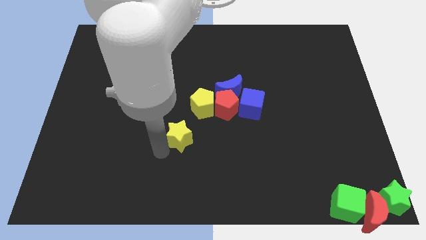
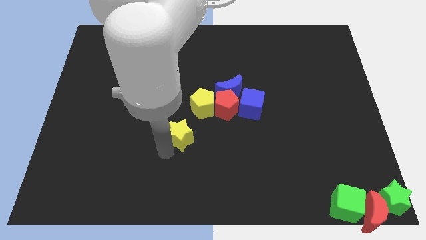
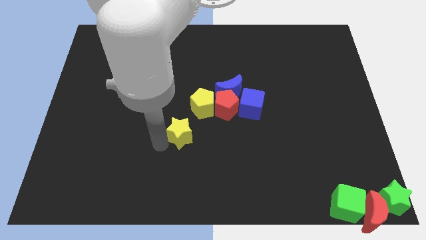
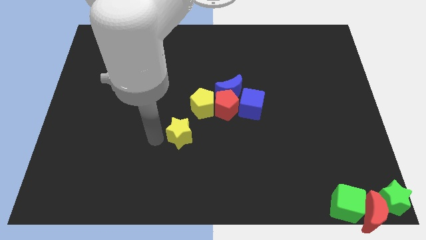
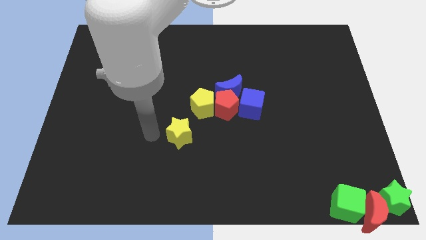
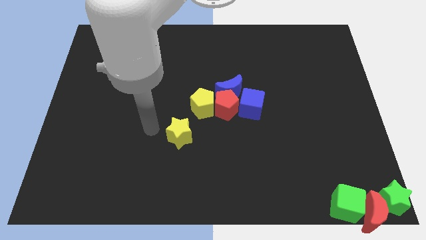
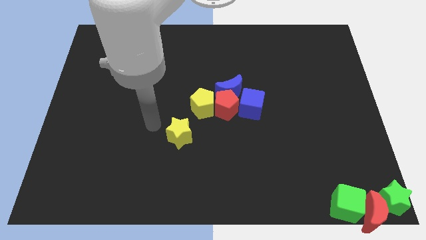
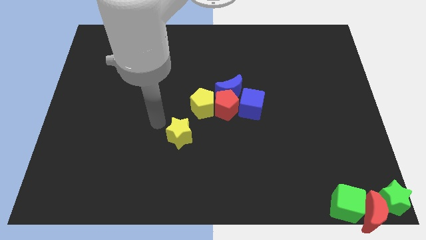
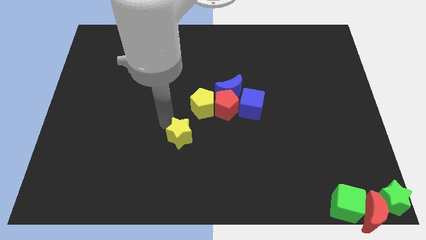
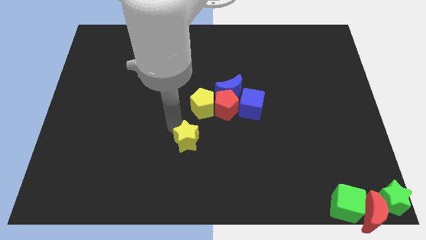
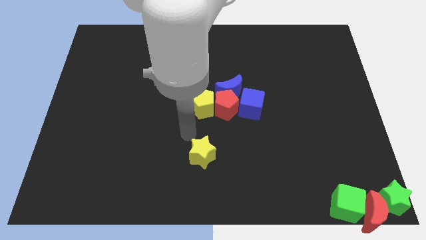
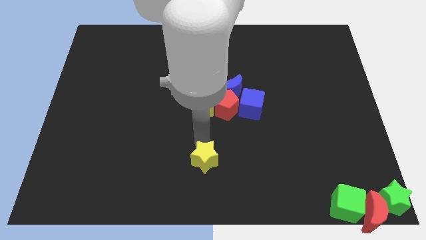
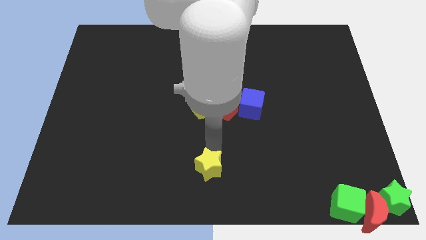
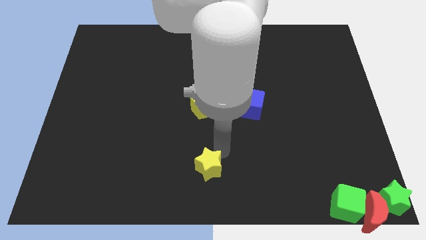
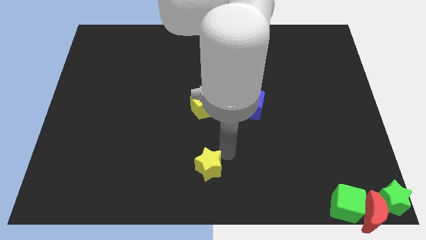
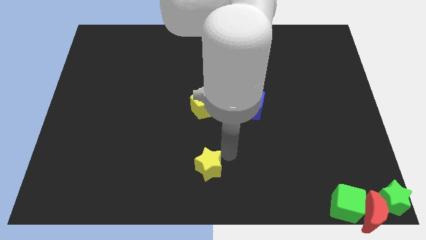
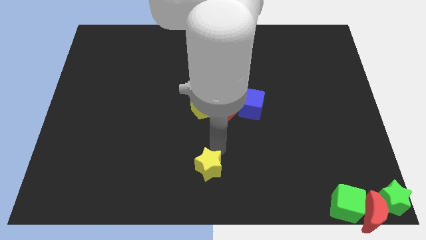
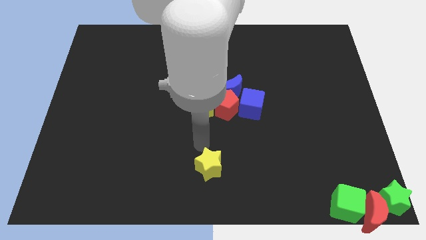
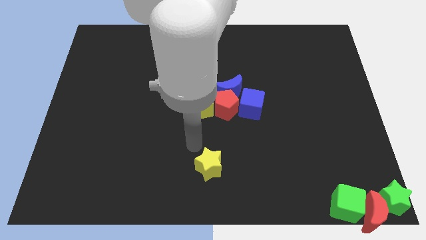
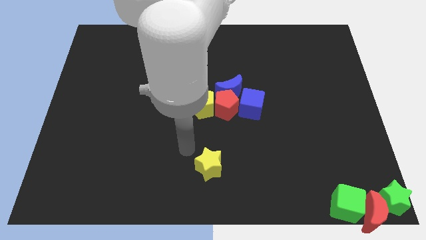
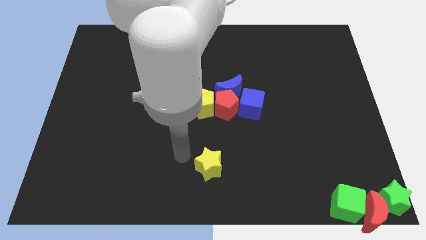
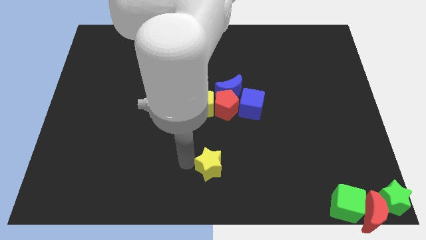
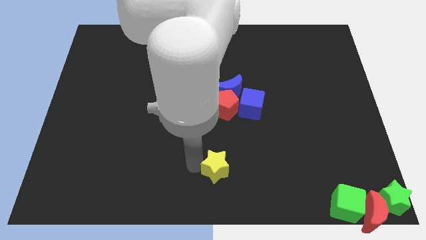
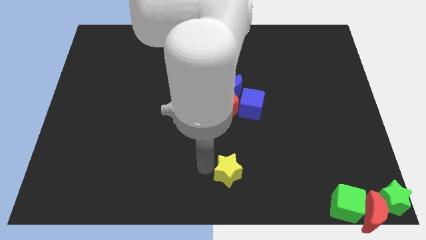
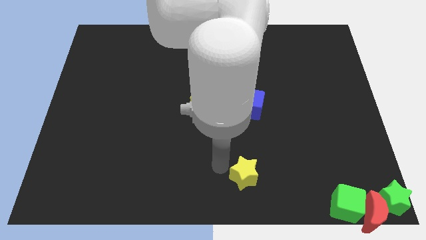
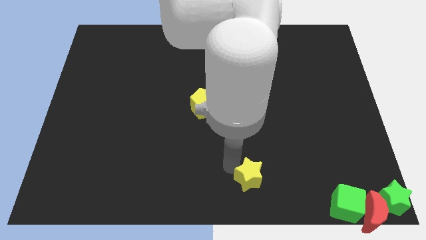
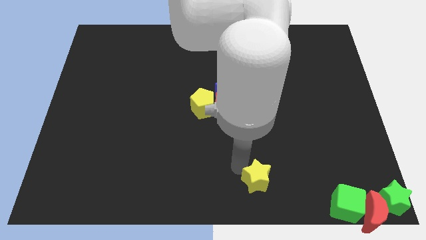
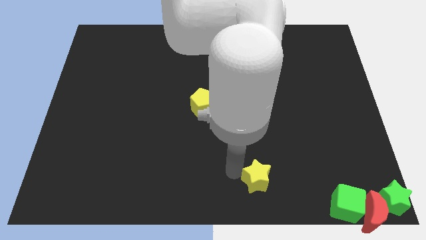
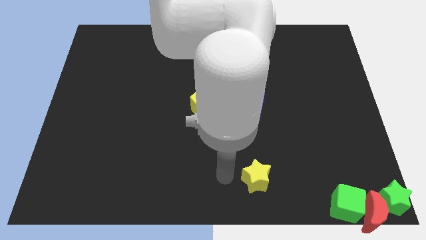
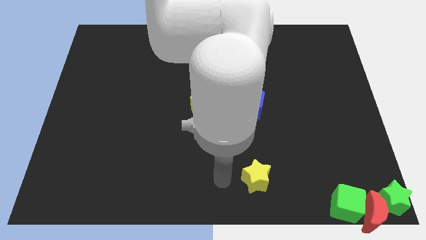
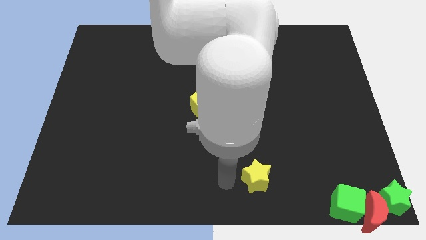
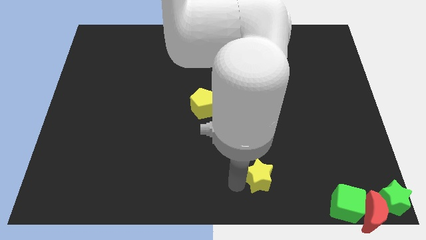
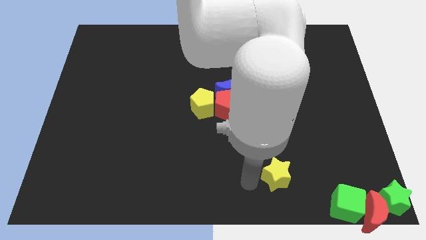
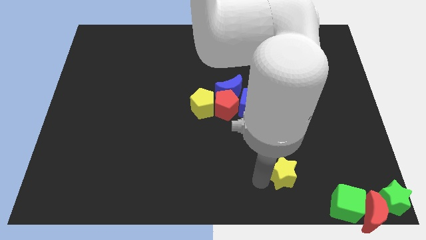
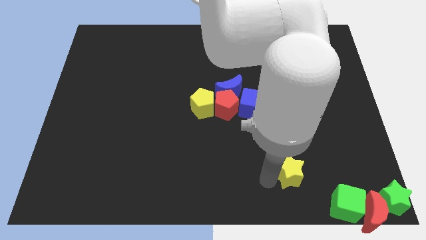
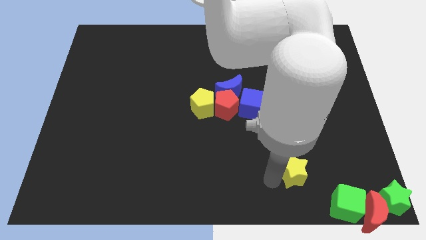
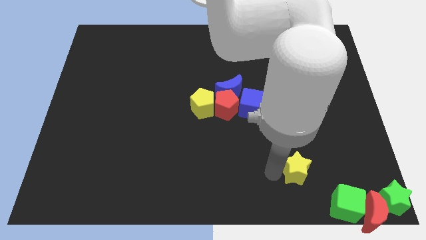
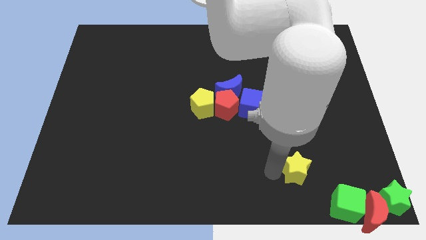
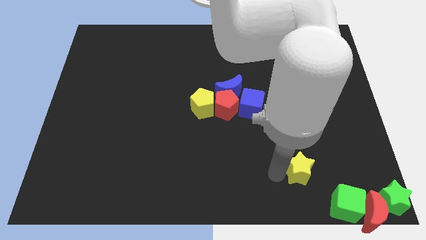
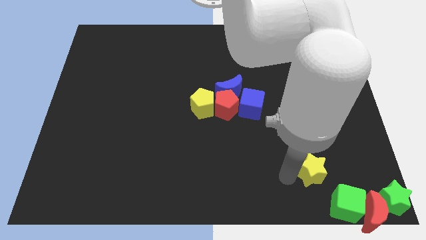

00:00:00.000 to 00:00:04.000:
put the yellow star on the top left of the green cube

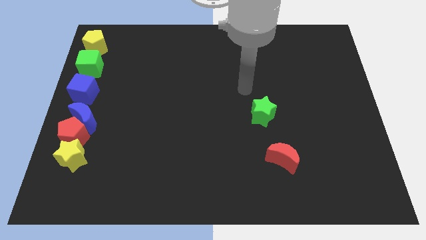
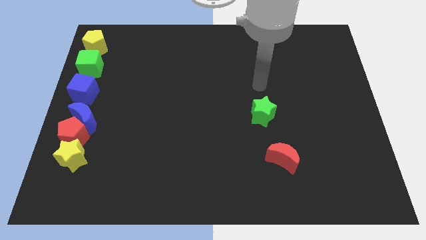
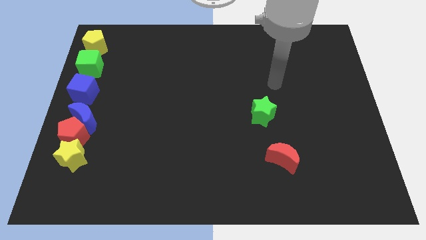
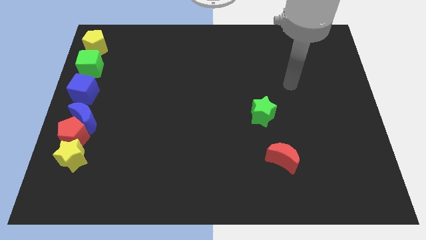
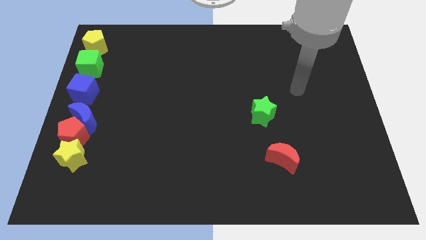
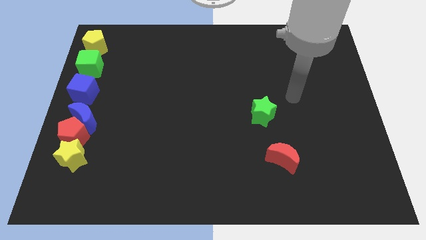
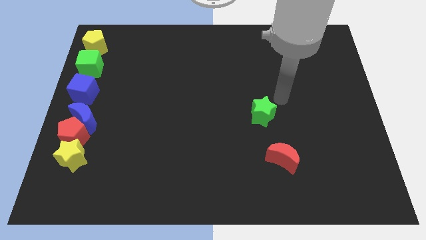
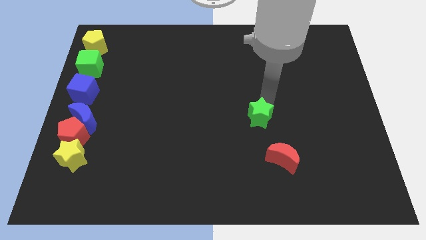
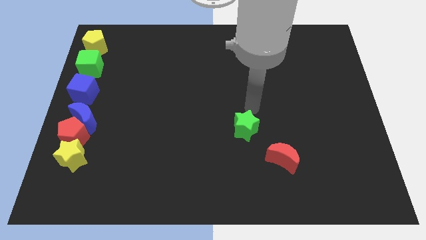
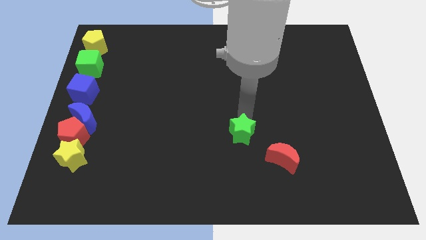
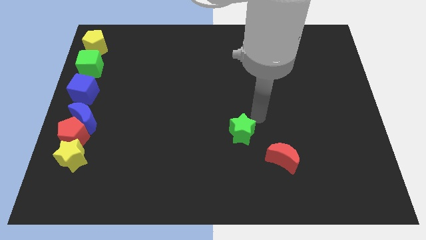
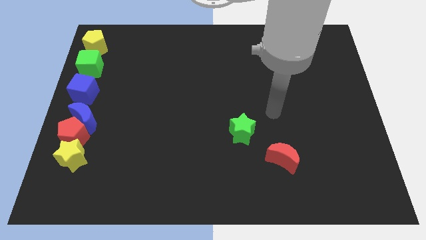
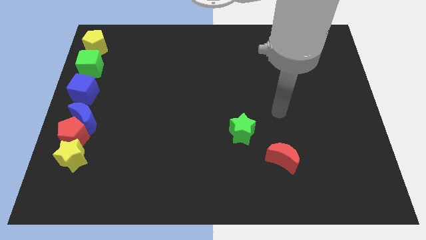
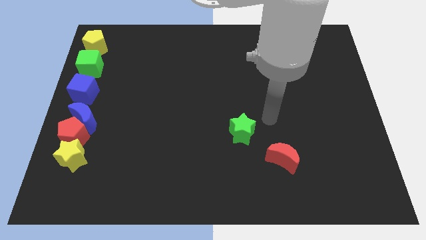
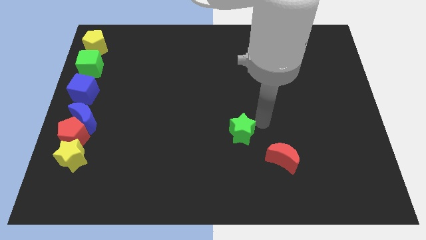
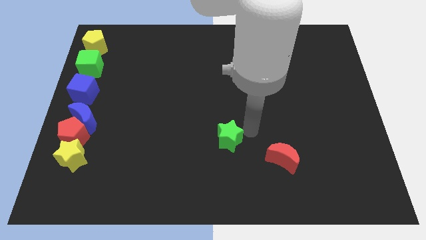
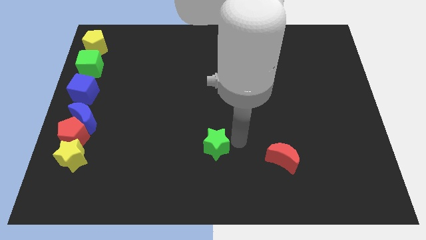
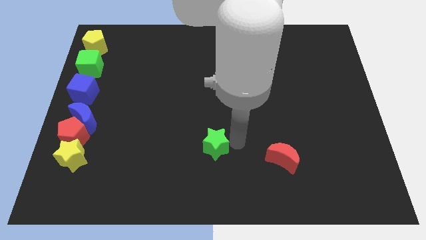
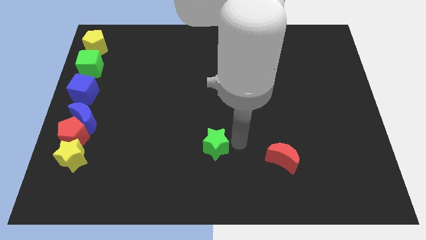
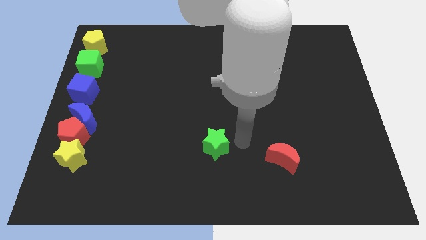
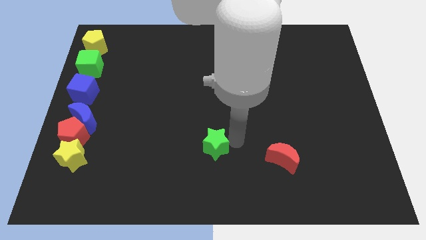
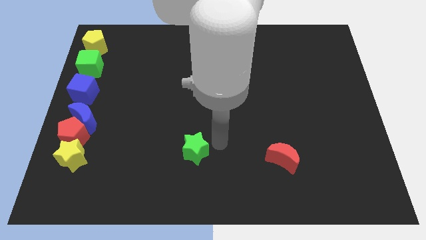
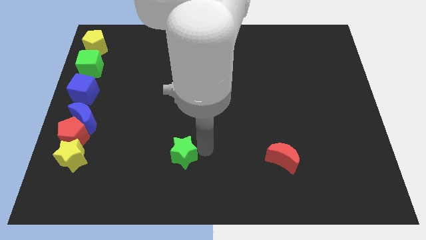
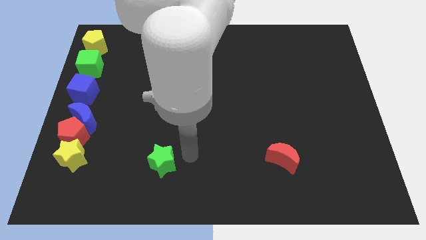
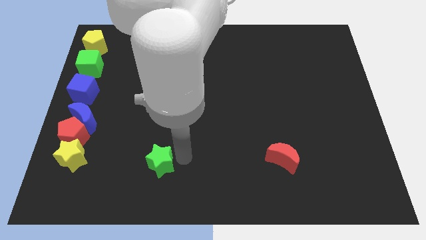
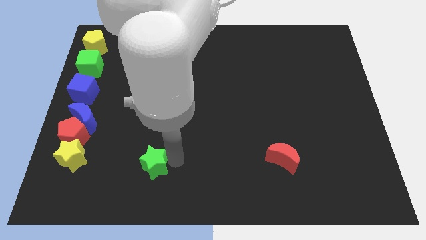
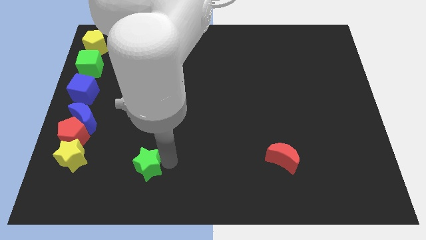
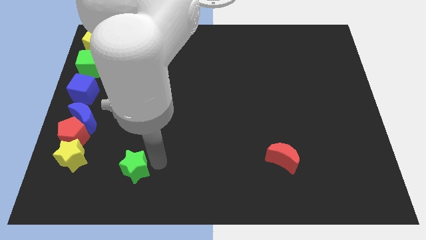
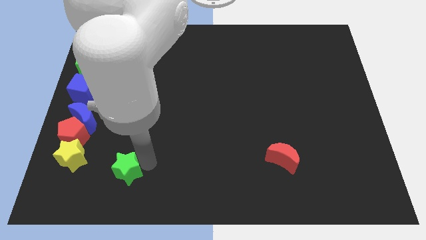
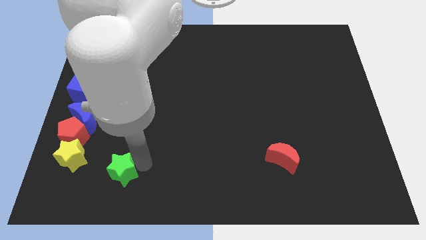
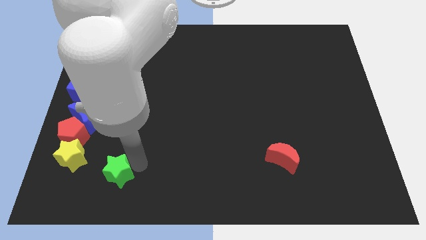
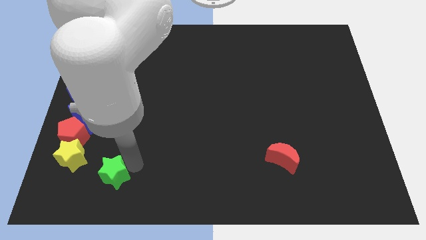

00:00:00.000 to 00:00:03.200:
slide the green star slightly towards the bottom left corner of the board

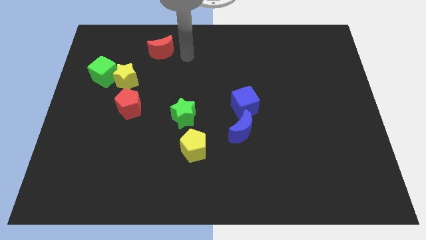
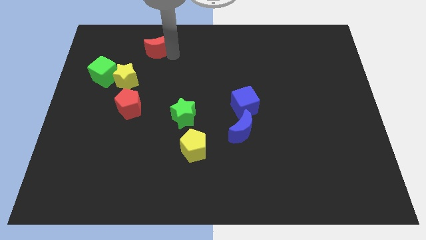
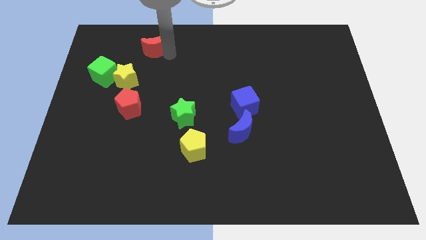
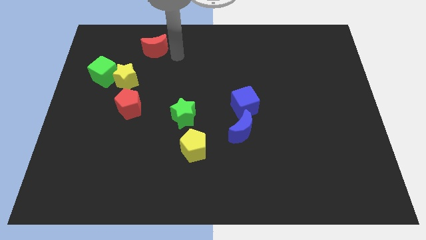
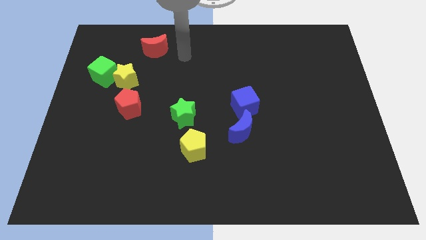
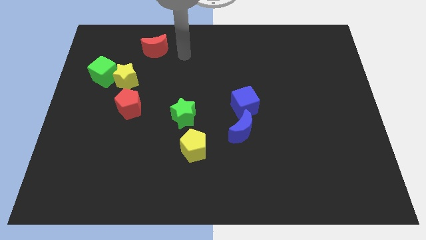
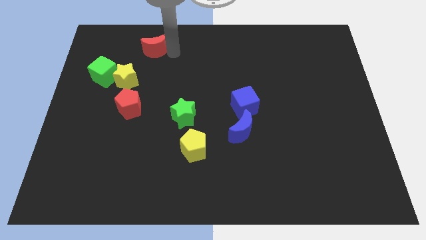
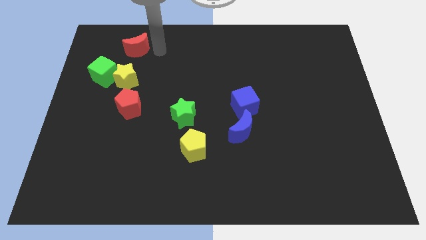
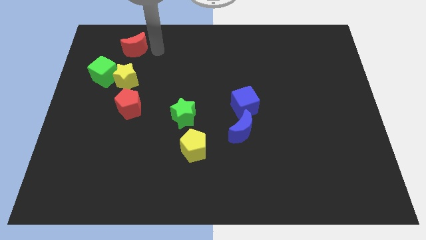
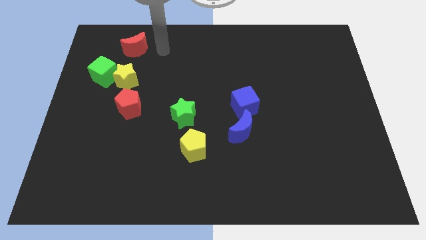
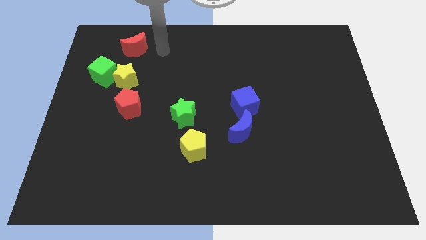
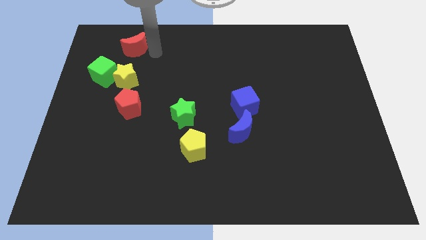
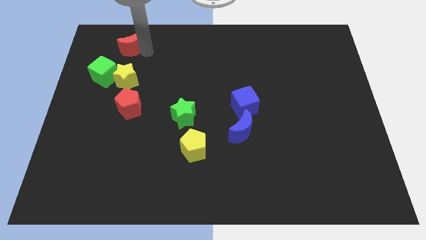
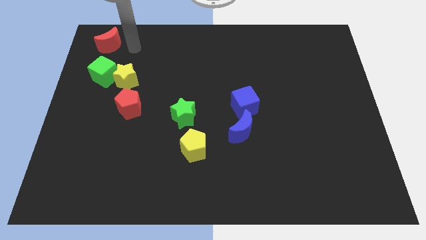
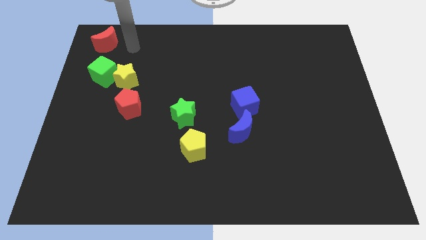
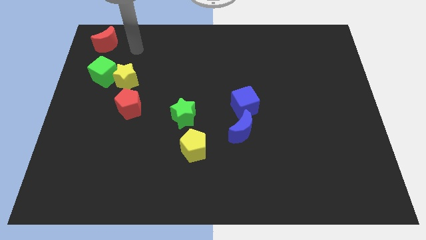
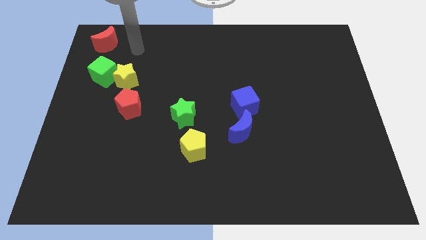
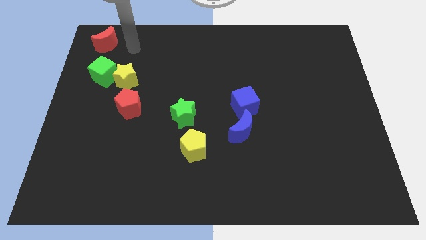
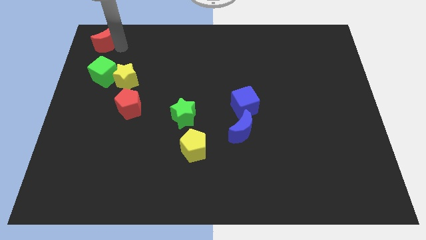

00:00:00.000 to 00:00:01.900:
place the red moon at the top of the green cube
